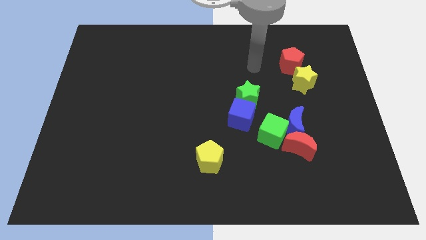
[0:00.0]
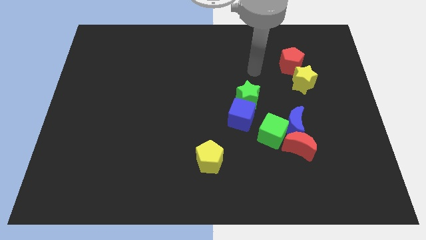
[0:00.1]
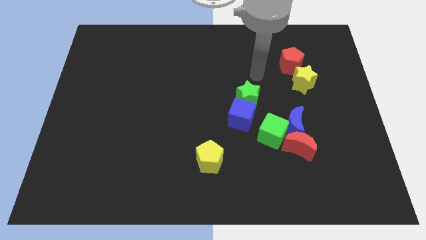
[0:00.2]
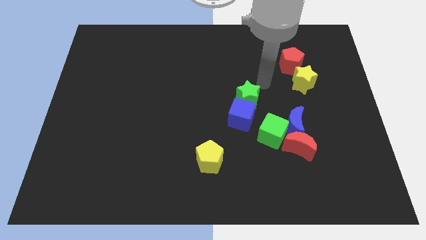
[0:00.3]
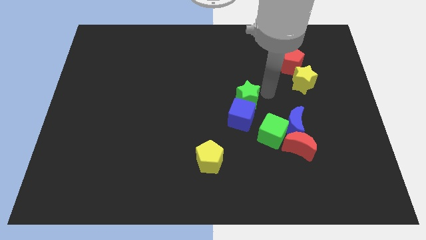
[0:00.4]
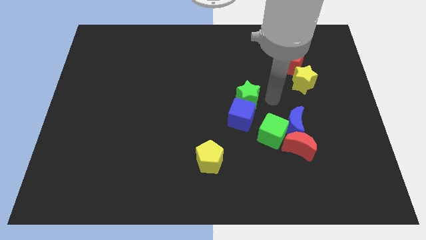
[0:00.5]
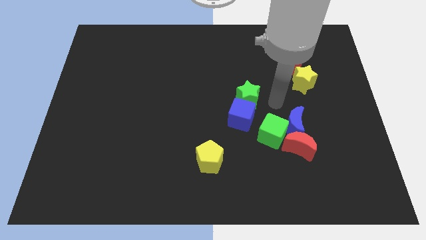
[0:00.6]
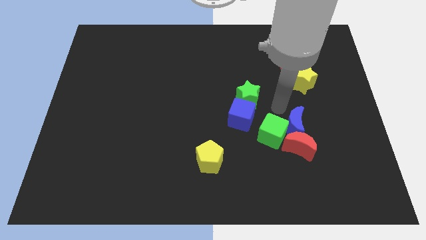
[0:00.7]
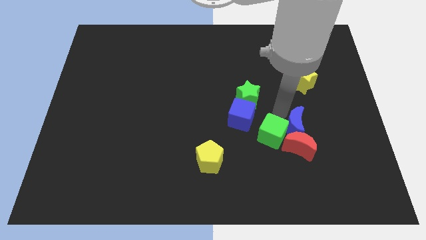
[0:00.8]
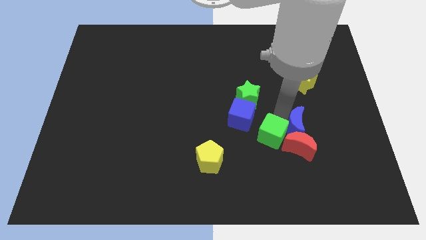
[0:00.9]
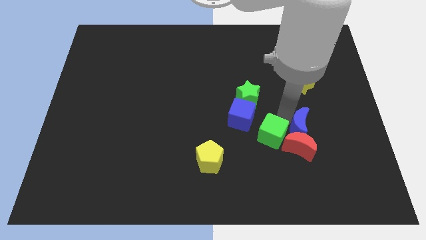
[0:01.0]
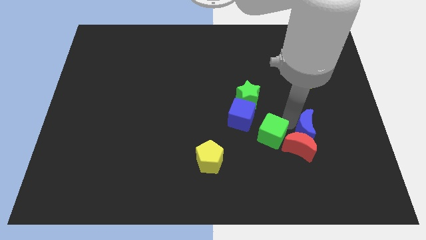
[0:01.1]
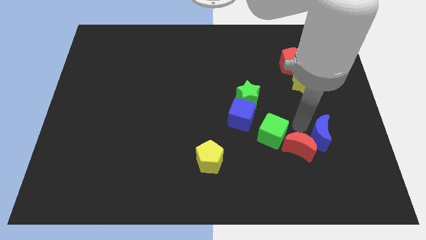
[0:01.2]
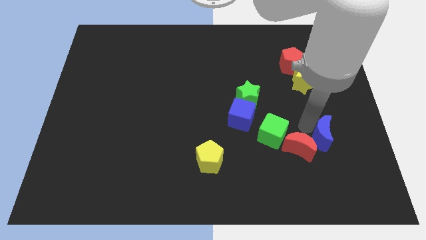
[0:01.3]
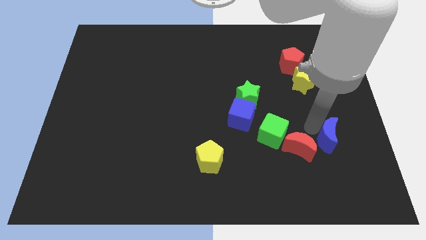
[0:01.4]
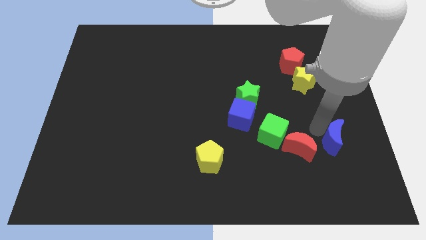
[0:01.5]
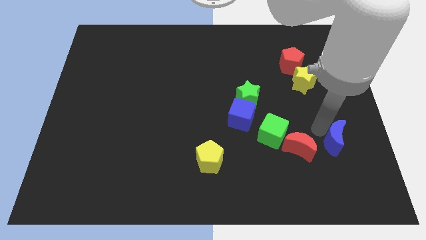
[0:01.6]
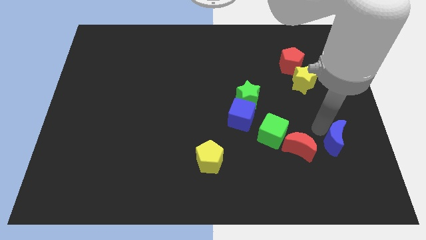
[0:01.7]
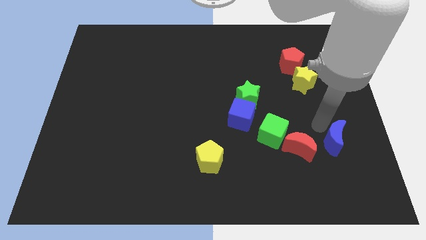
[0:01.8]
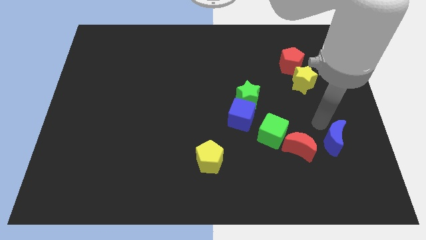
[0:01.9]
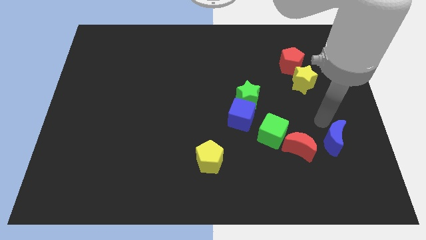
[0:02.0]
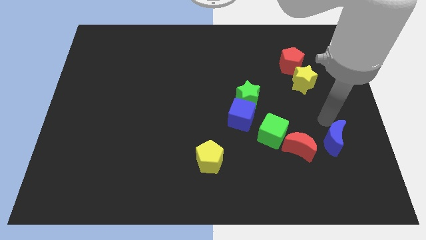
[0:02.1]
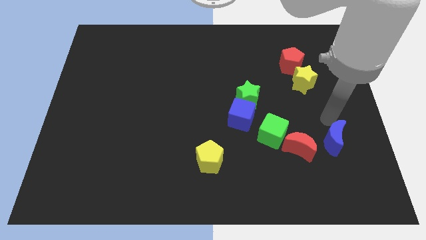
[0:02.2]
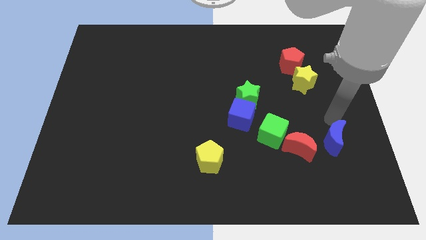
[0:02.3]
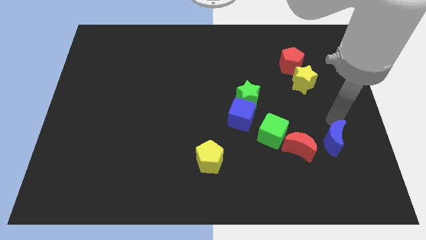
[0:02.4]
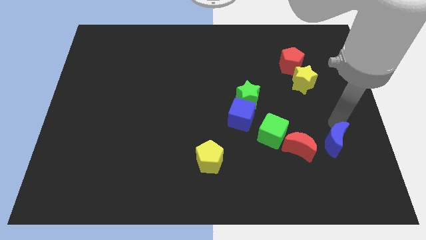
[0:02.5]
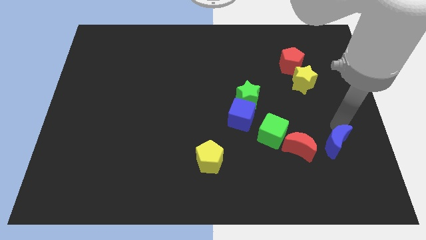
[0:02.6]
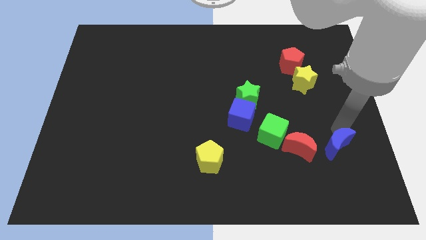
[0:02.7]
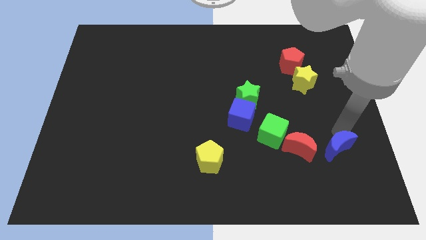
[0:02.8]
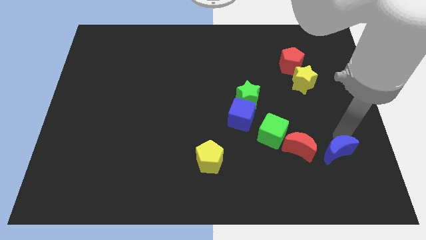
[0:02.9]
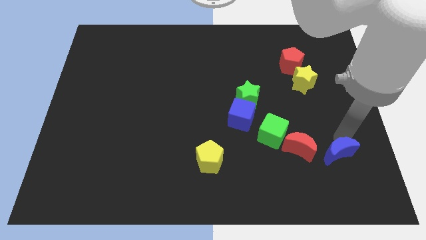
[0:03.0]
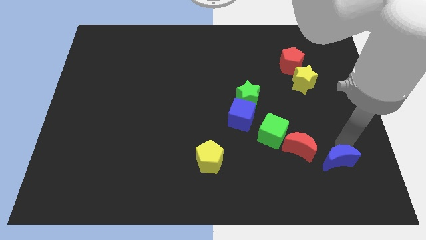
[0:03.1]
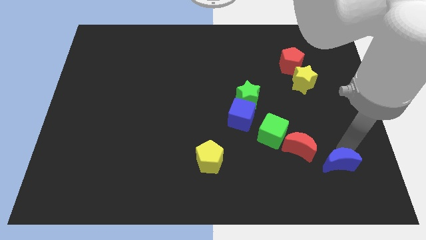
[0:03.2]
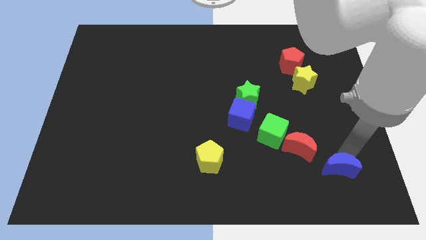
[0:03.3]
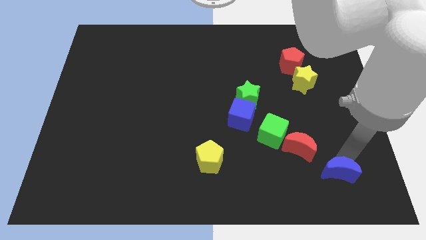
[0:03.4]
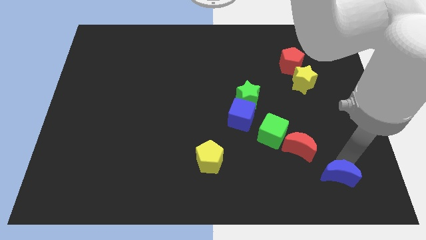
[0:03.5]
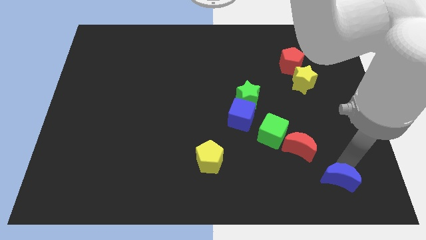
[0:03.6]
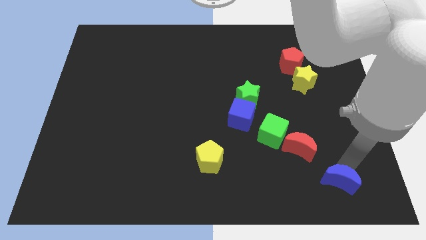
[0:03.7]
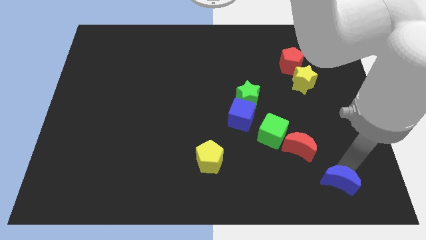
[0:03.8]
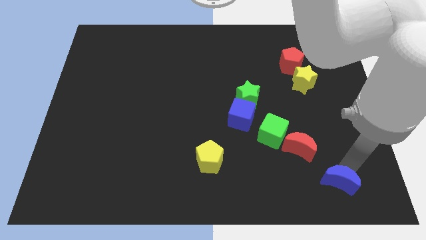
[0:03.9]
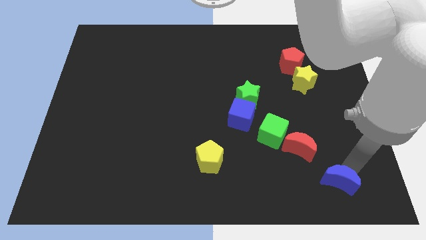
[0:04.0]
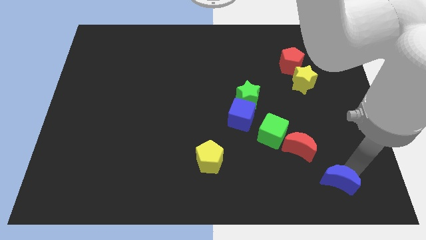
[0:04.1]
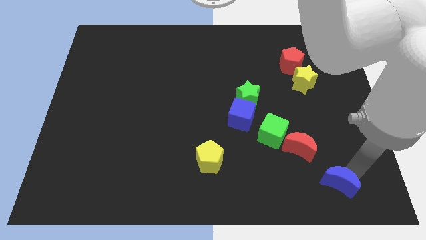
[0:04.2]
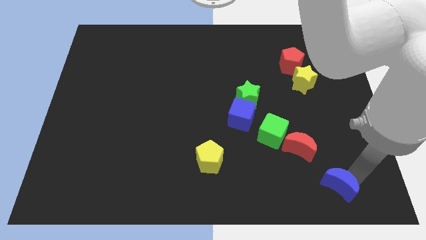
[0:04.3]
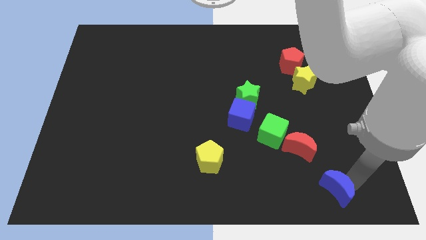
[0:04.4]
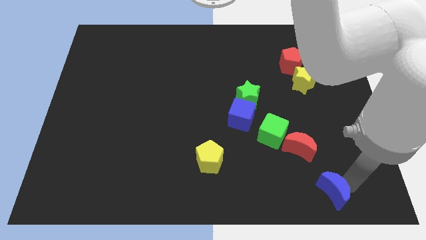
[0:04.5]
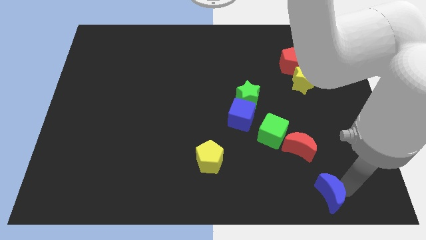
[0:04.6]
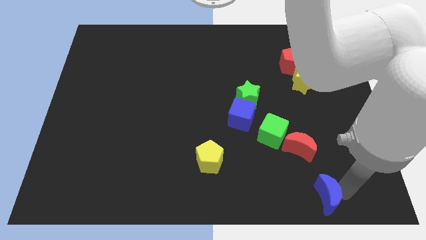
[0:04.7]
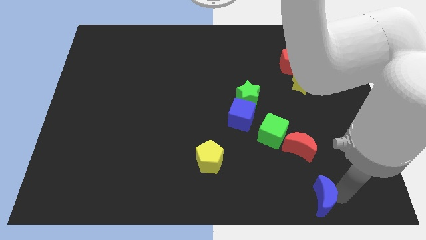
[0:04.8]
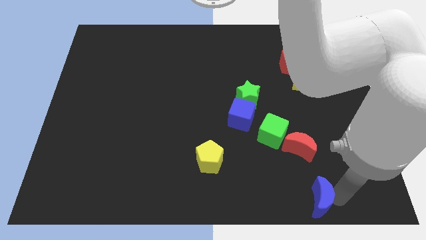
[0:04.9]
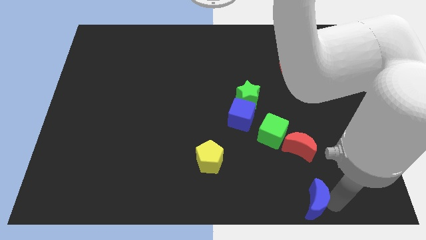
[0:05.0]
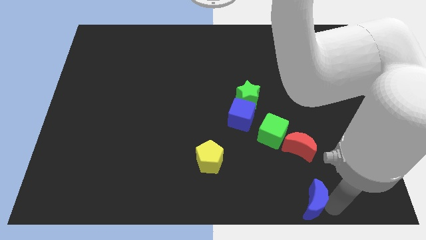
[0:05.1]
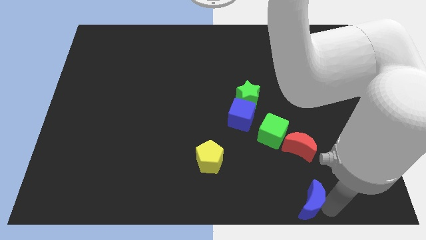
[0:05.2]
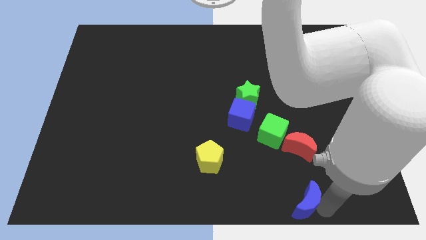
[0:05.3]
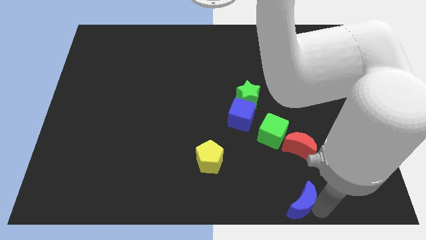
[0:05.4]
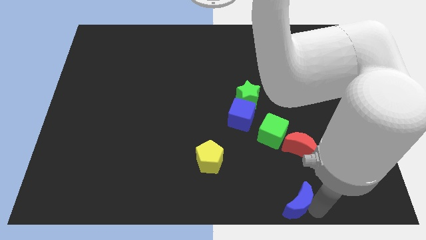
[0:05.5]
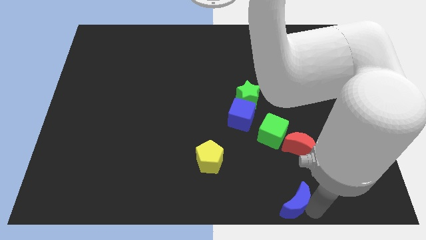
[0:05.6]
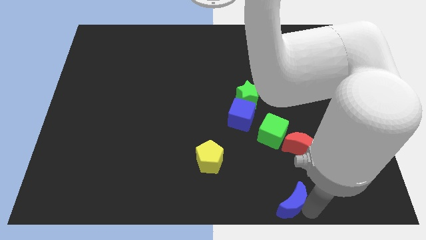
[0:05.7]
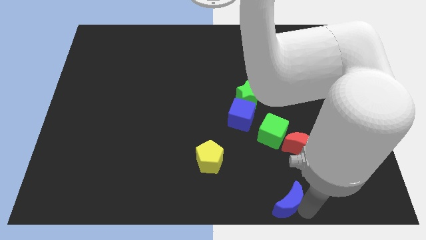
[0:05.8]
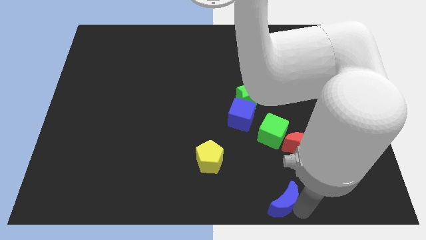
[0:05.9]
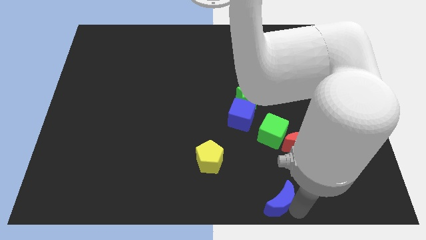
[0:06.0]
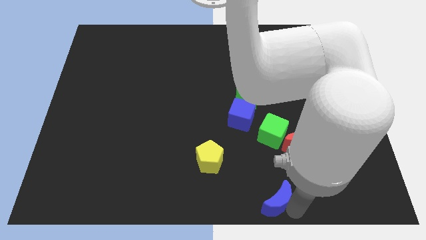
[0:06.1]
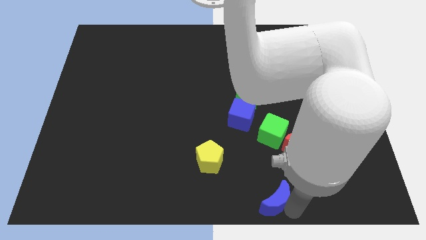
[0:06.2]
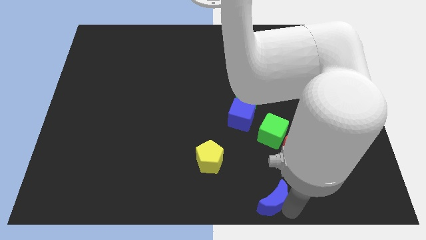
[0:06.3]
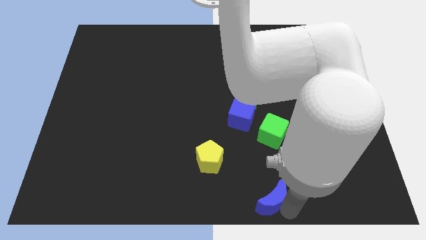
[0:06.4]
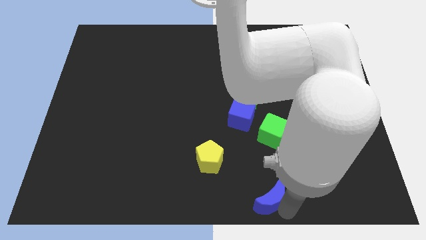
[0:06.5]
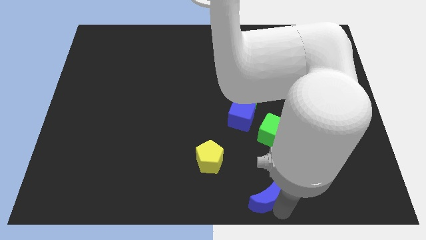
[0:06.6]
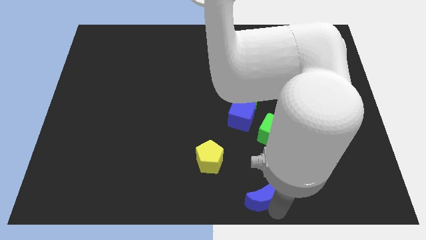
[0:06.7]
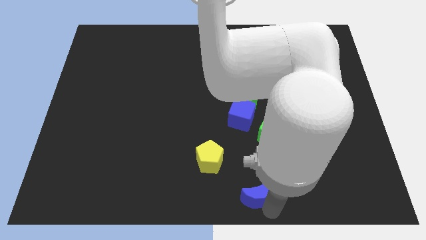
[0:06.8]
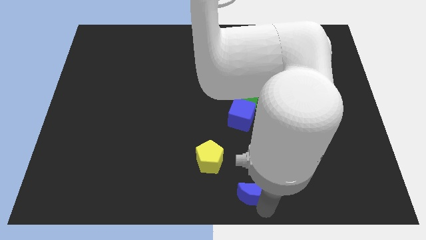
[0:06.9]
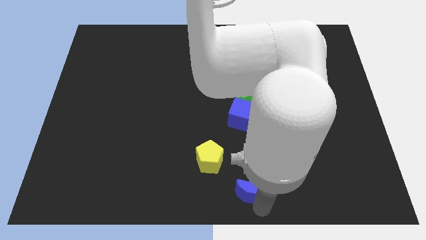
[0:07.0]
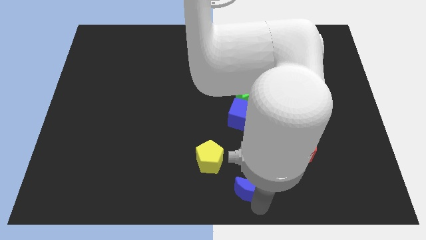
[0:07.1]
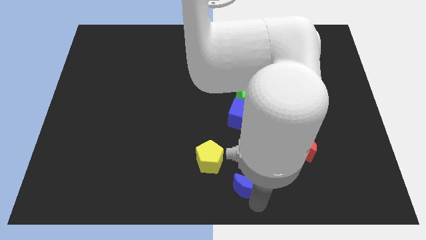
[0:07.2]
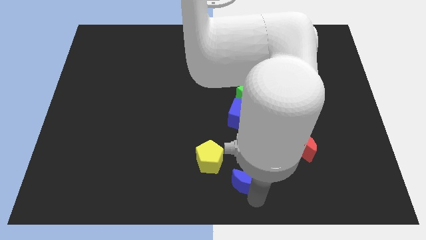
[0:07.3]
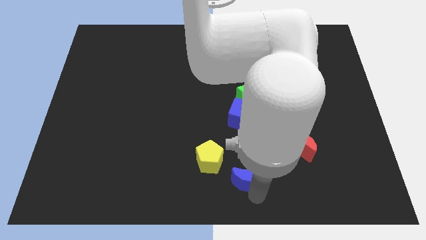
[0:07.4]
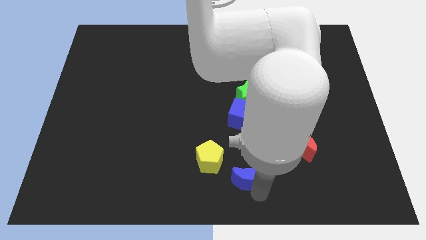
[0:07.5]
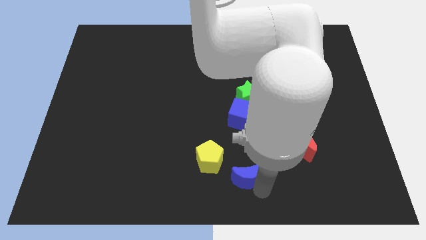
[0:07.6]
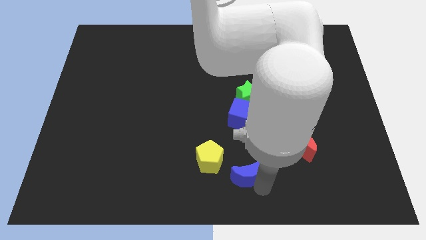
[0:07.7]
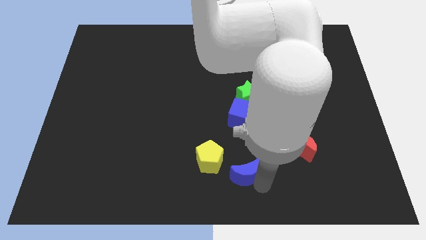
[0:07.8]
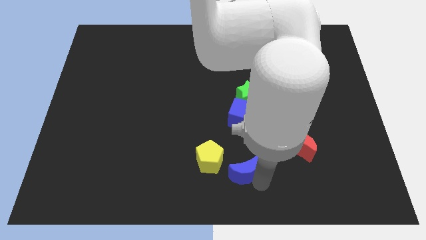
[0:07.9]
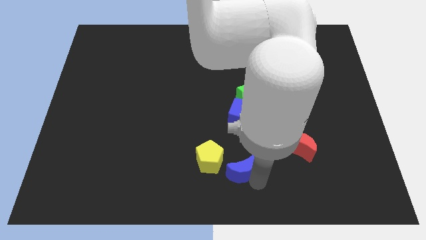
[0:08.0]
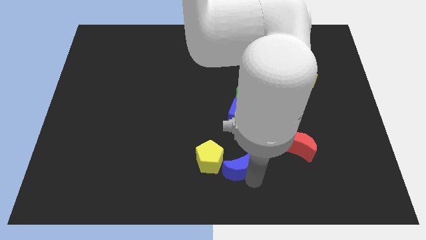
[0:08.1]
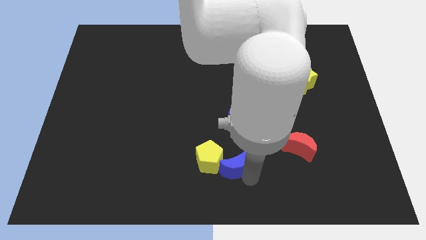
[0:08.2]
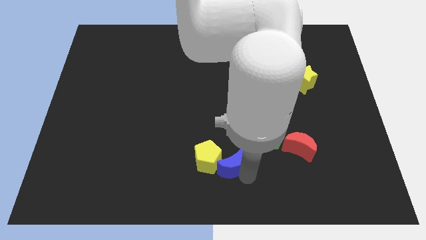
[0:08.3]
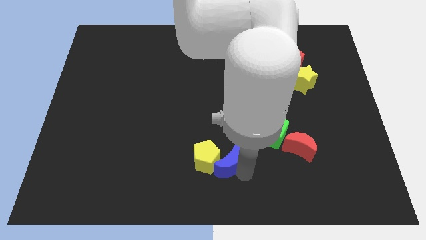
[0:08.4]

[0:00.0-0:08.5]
move the blue moon towards the yellow pentagon

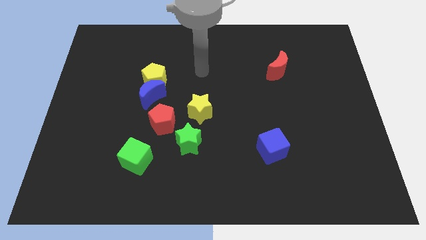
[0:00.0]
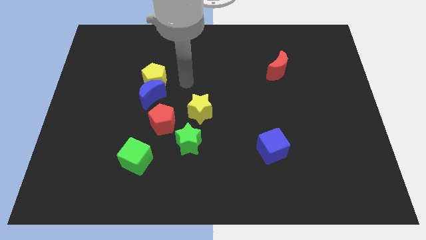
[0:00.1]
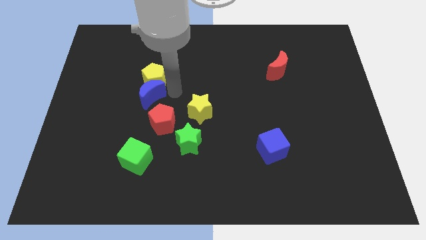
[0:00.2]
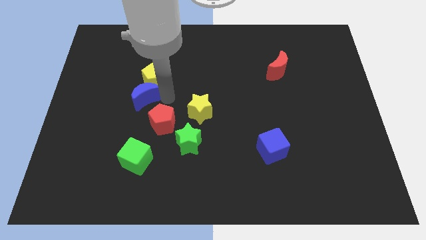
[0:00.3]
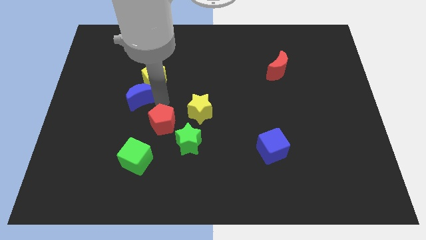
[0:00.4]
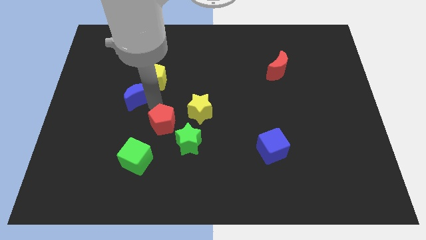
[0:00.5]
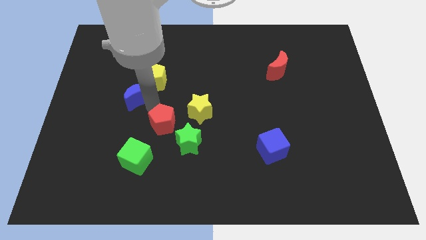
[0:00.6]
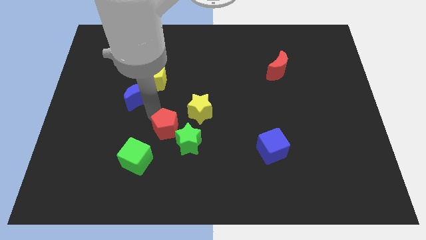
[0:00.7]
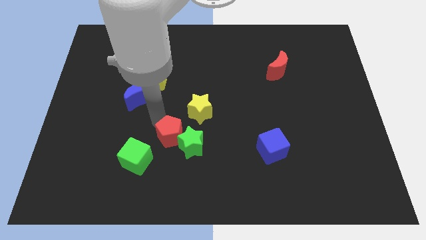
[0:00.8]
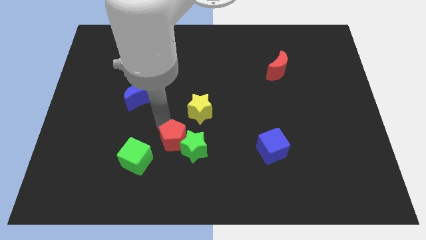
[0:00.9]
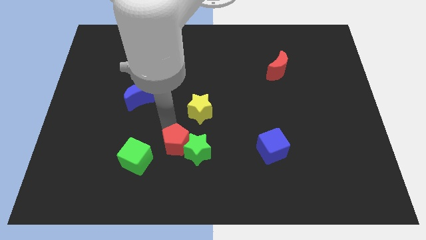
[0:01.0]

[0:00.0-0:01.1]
move the red pentagon towards the green star
